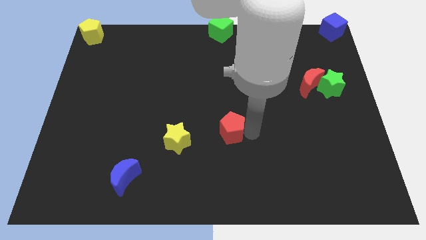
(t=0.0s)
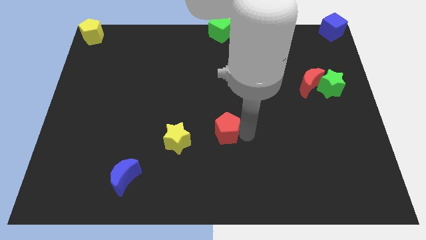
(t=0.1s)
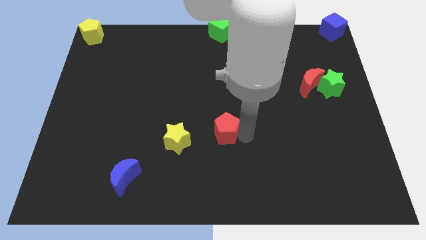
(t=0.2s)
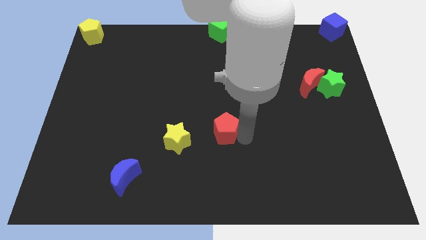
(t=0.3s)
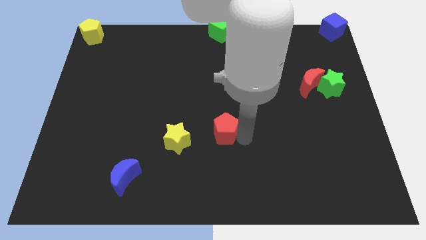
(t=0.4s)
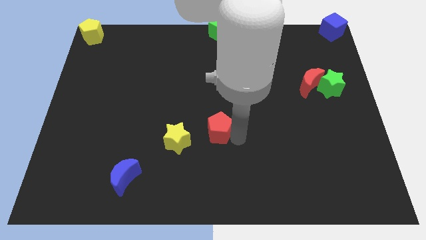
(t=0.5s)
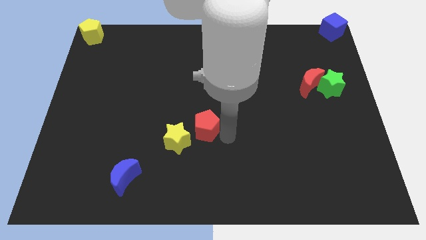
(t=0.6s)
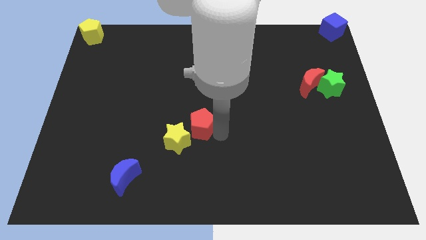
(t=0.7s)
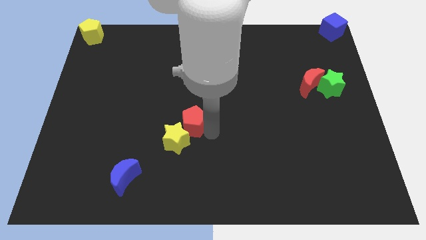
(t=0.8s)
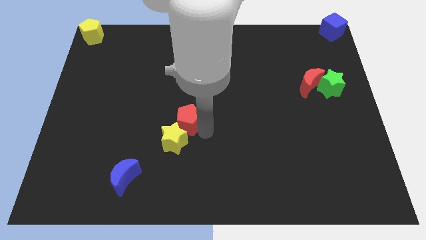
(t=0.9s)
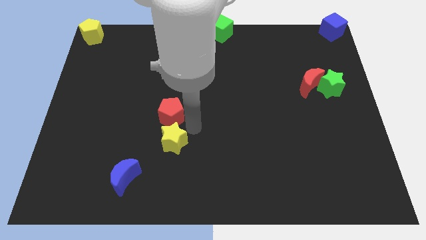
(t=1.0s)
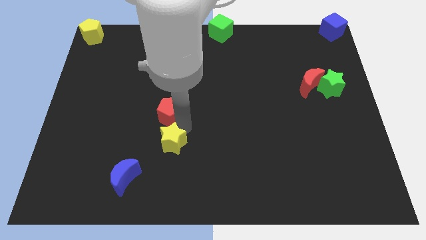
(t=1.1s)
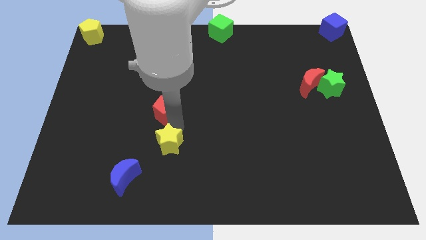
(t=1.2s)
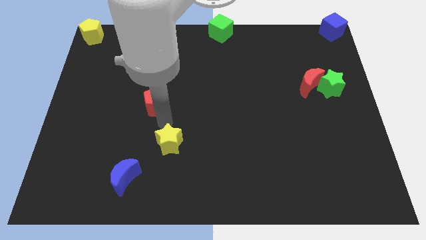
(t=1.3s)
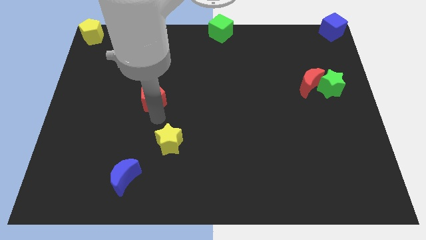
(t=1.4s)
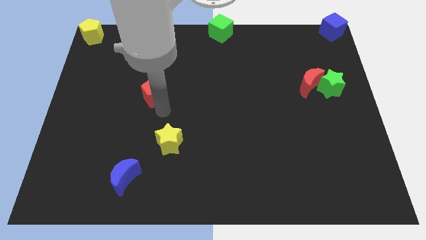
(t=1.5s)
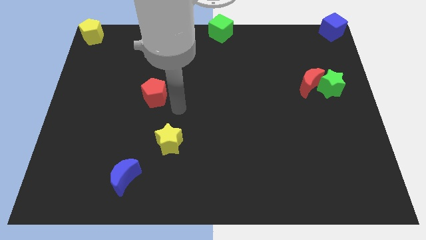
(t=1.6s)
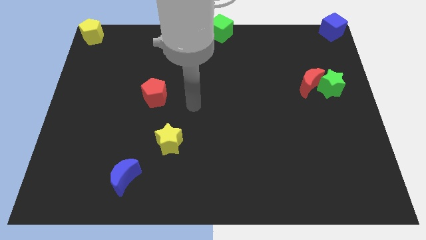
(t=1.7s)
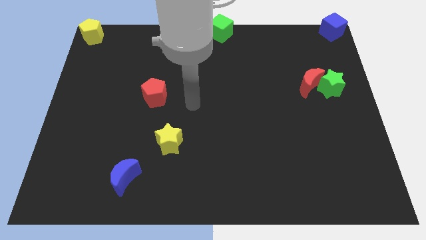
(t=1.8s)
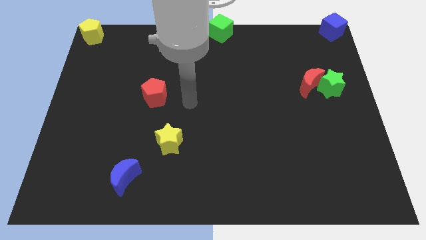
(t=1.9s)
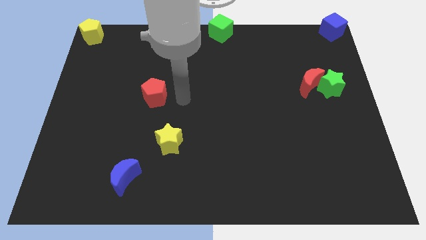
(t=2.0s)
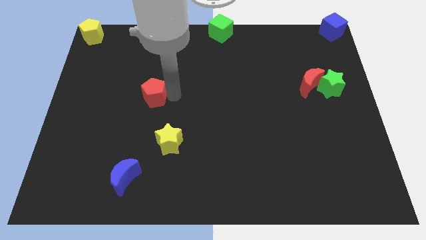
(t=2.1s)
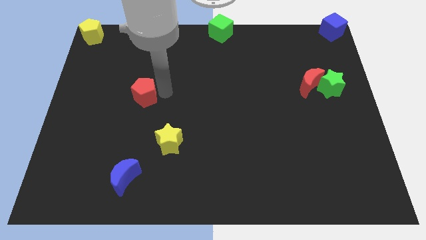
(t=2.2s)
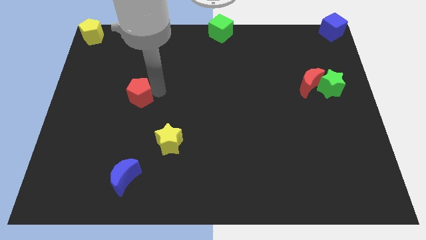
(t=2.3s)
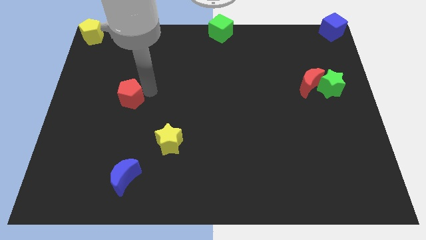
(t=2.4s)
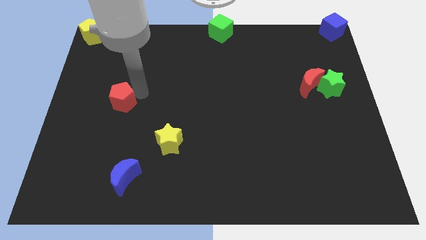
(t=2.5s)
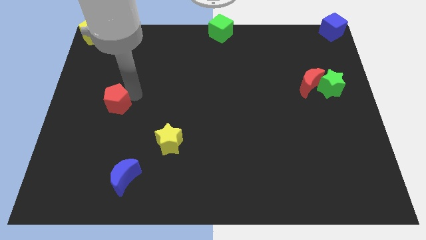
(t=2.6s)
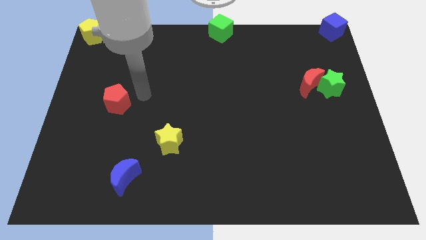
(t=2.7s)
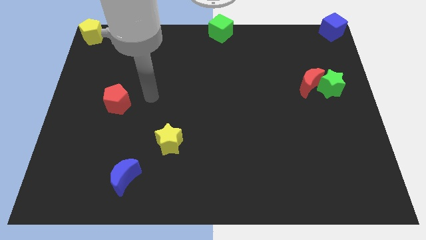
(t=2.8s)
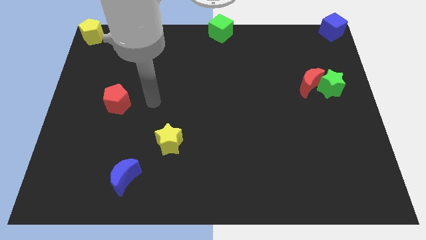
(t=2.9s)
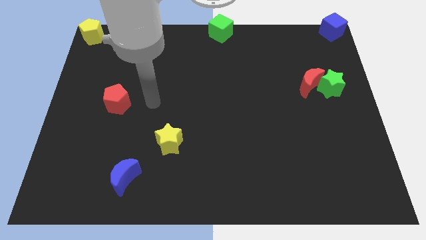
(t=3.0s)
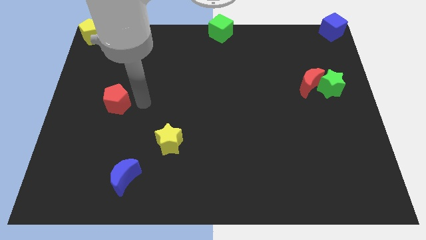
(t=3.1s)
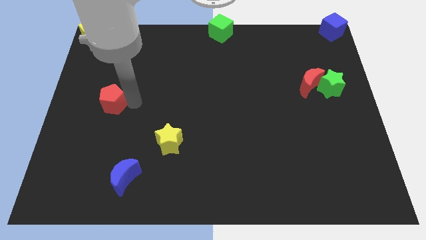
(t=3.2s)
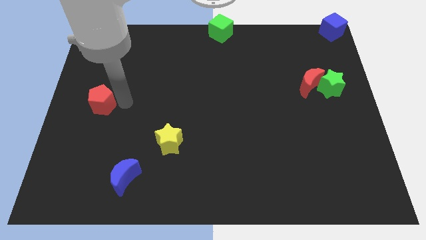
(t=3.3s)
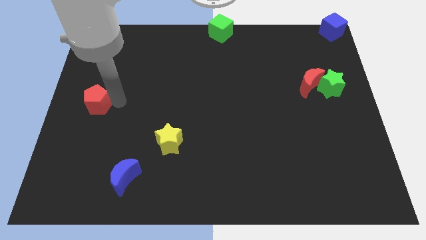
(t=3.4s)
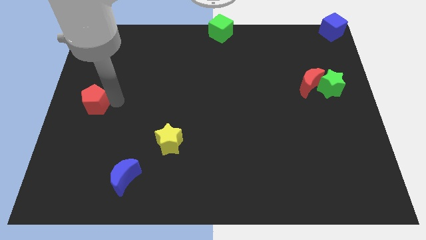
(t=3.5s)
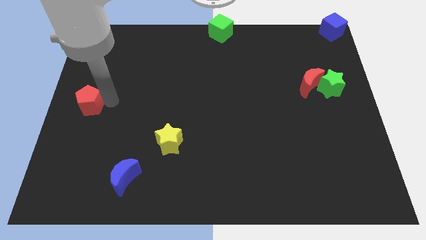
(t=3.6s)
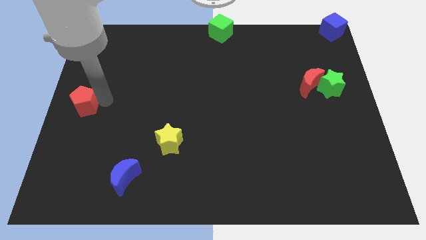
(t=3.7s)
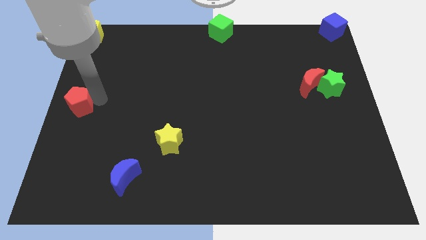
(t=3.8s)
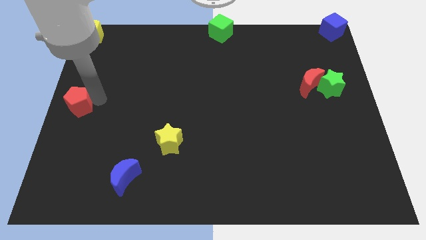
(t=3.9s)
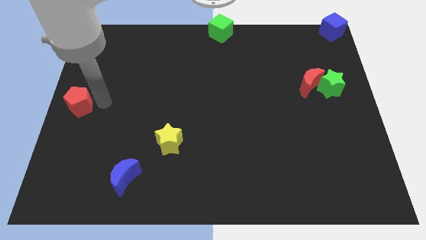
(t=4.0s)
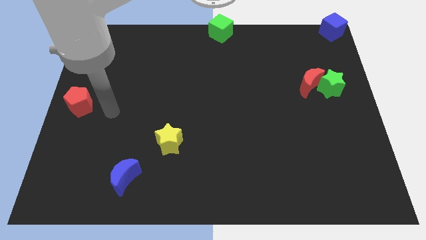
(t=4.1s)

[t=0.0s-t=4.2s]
slide the red pentagon to the center left of the table

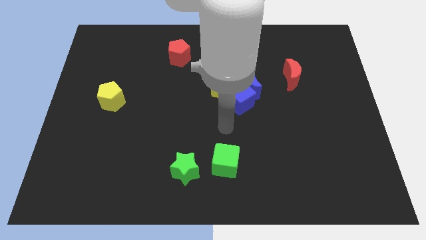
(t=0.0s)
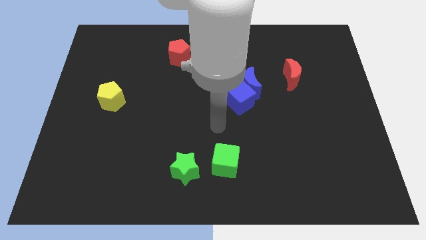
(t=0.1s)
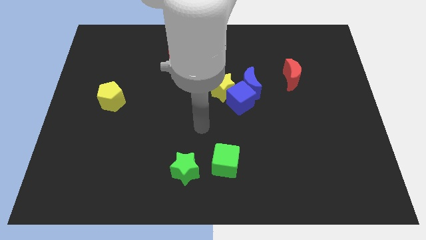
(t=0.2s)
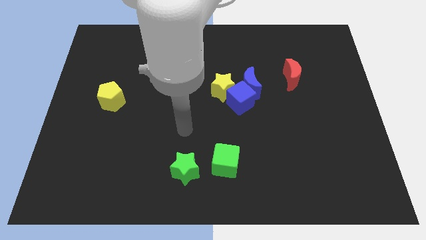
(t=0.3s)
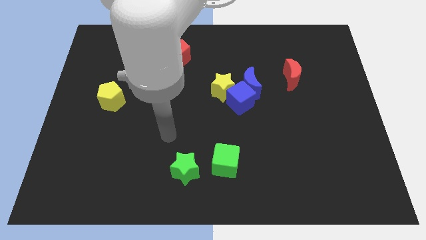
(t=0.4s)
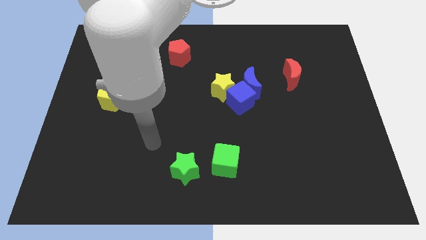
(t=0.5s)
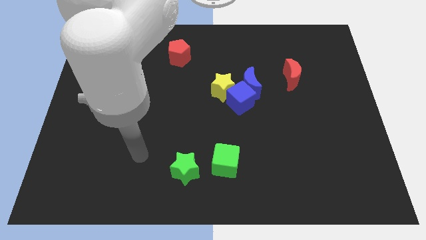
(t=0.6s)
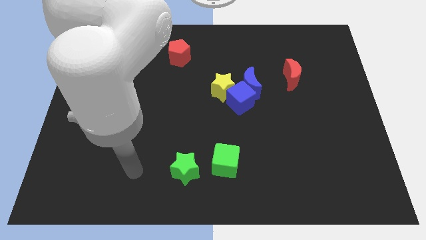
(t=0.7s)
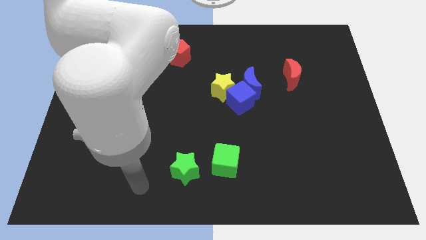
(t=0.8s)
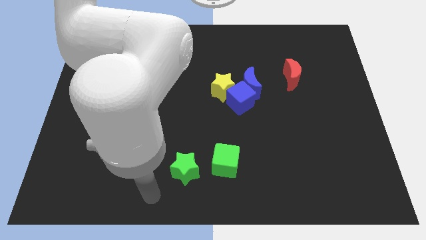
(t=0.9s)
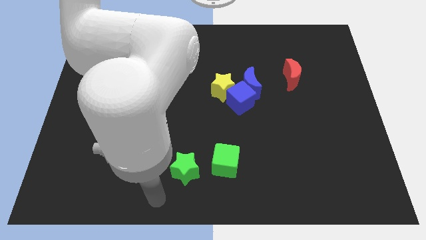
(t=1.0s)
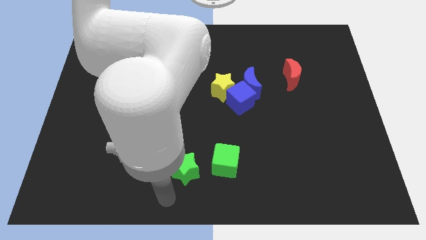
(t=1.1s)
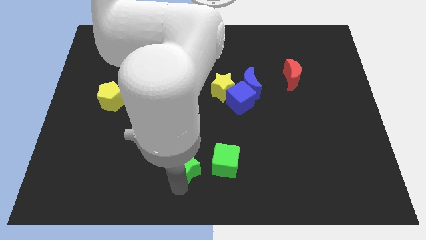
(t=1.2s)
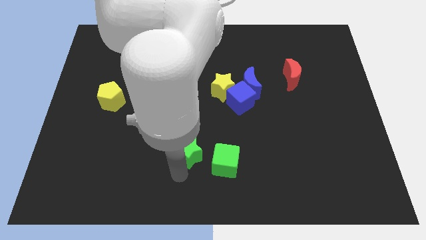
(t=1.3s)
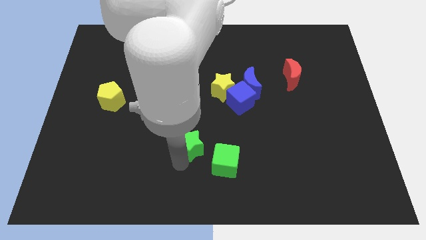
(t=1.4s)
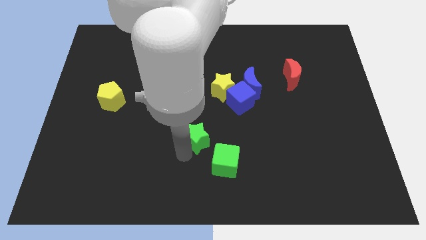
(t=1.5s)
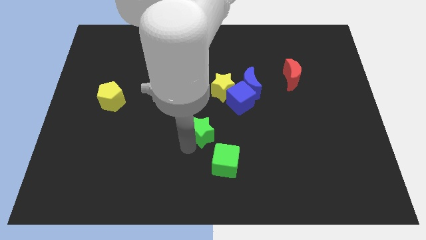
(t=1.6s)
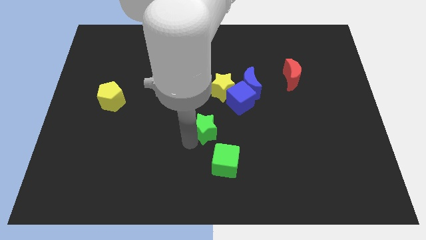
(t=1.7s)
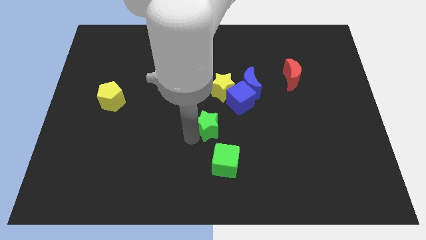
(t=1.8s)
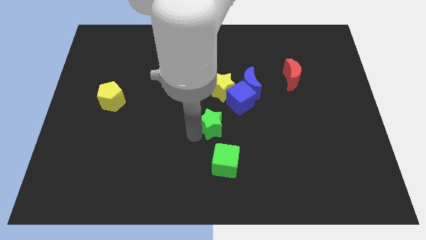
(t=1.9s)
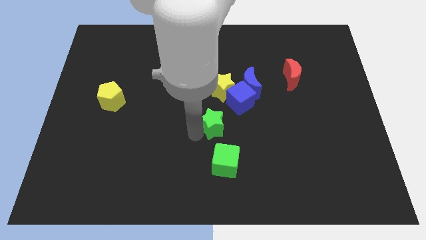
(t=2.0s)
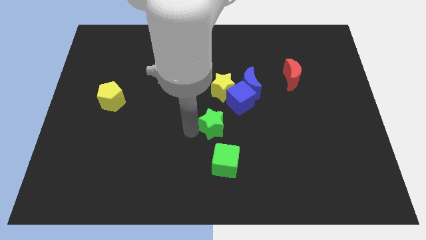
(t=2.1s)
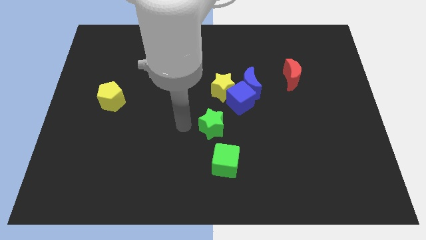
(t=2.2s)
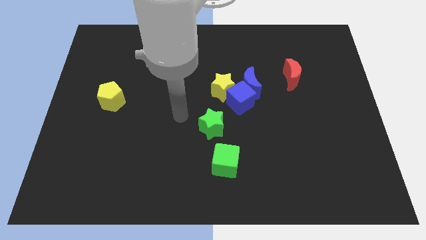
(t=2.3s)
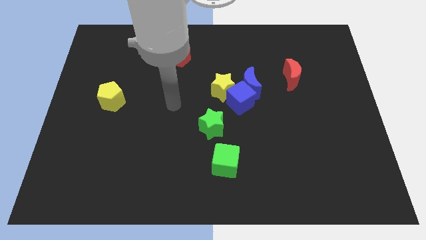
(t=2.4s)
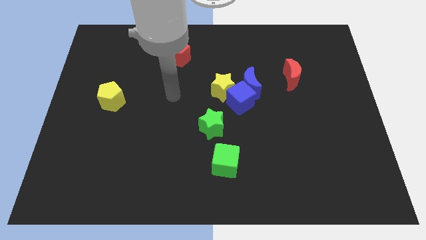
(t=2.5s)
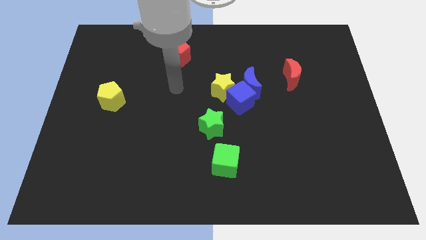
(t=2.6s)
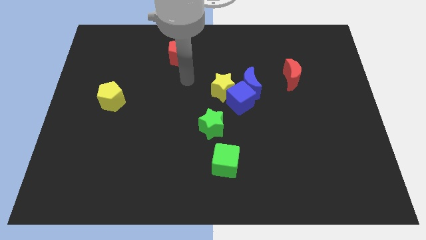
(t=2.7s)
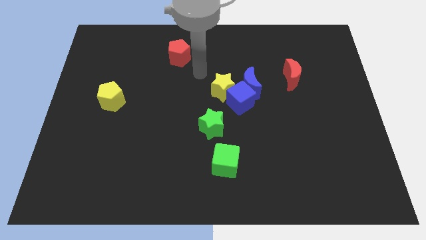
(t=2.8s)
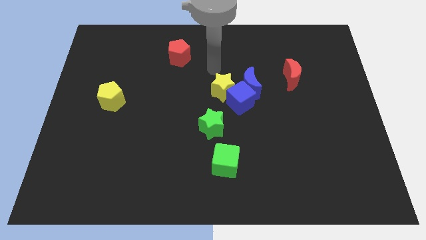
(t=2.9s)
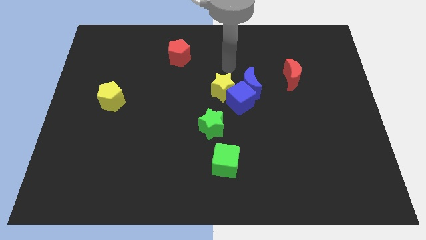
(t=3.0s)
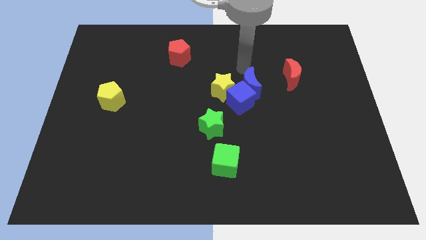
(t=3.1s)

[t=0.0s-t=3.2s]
move the green star towards the blue cube

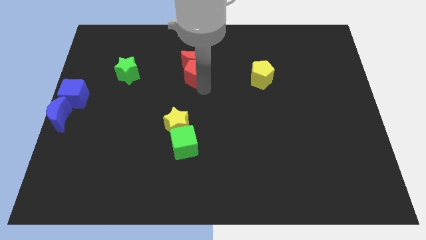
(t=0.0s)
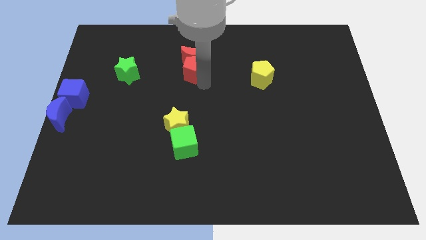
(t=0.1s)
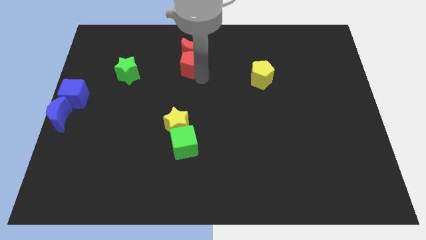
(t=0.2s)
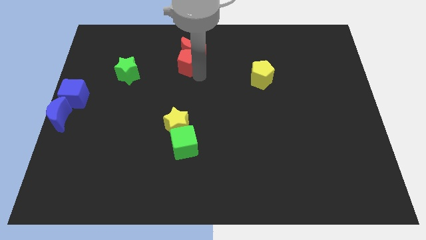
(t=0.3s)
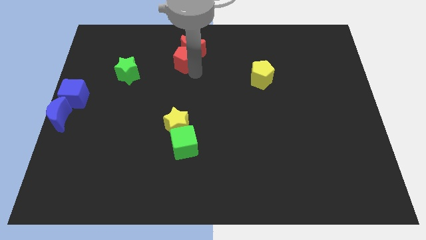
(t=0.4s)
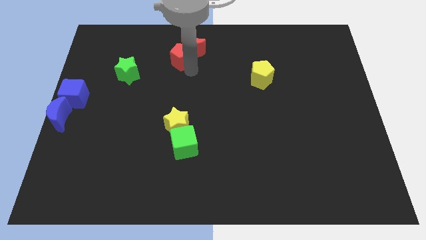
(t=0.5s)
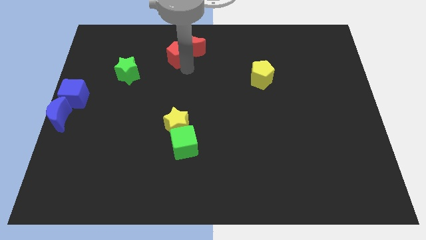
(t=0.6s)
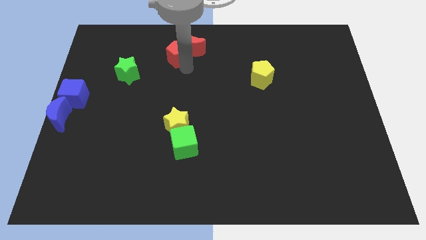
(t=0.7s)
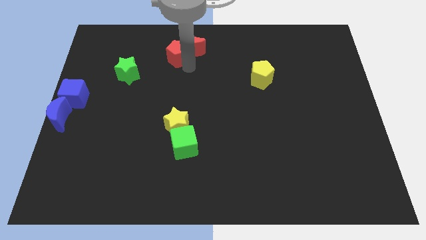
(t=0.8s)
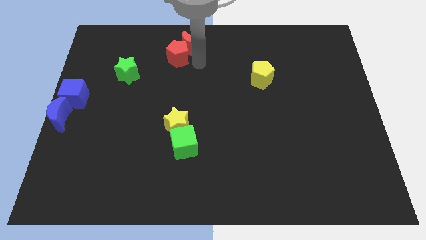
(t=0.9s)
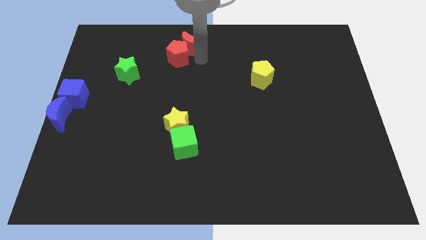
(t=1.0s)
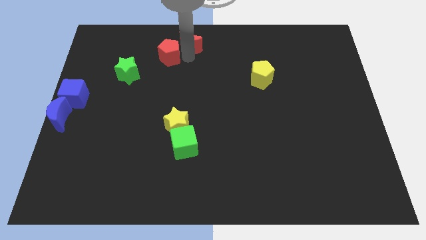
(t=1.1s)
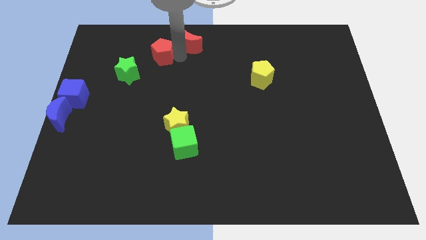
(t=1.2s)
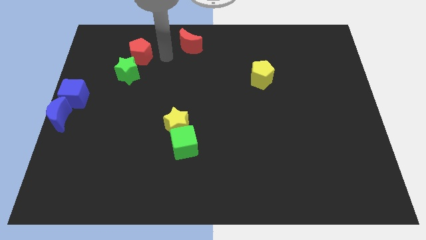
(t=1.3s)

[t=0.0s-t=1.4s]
separate the red blocks apart
